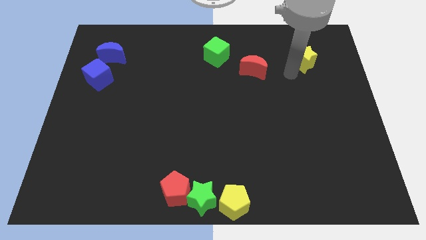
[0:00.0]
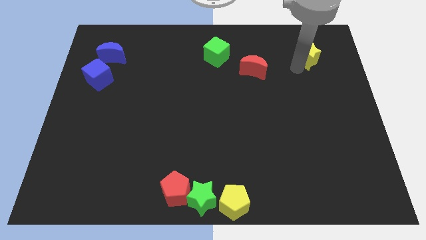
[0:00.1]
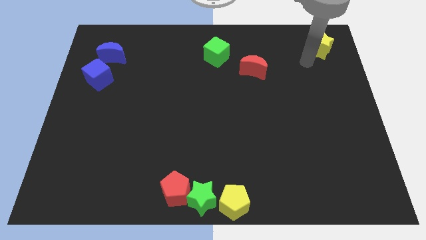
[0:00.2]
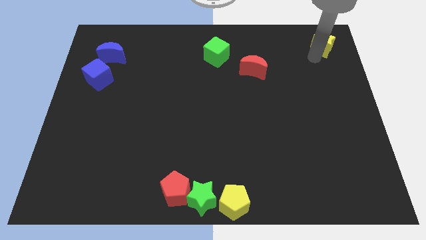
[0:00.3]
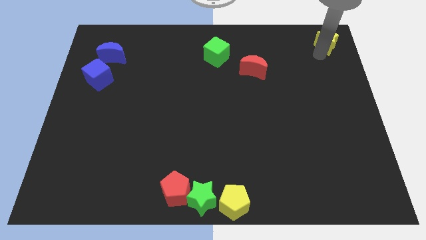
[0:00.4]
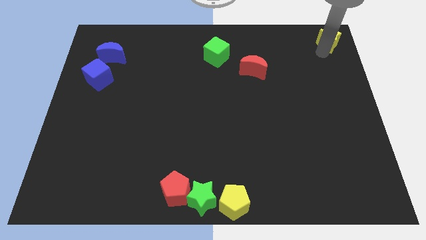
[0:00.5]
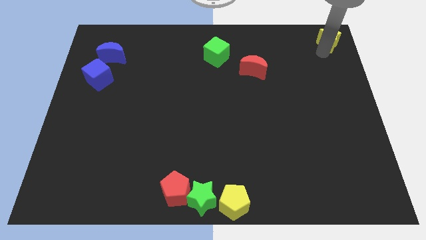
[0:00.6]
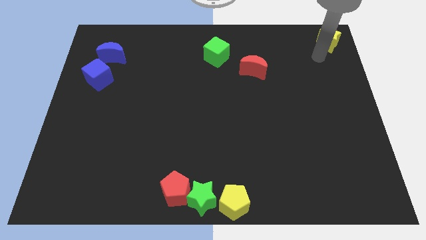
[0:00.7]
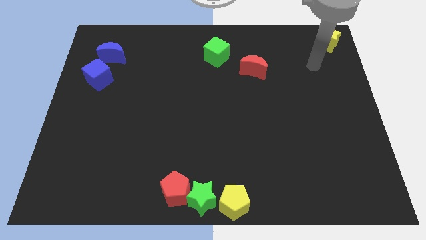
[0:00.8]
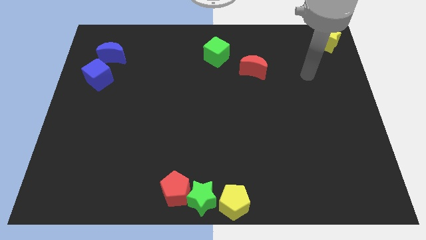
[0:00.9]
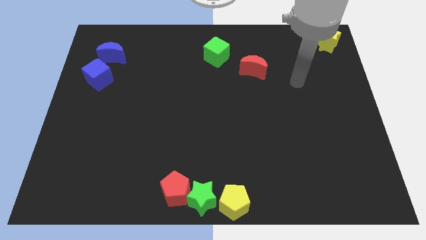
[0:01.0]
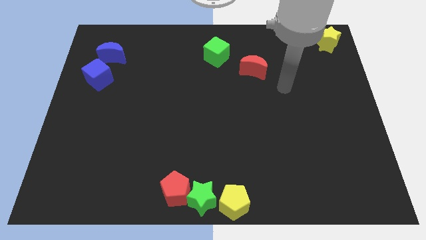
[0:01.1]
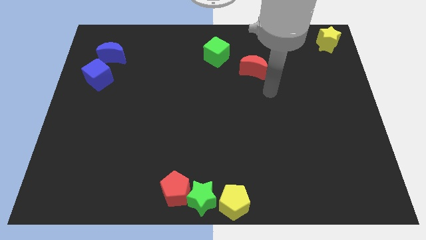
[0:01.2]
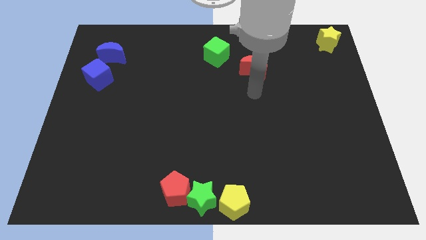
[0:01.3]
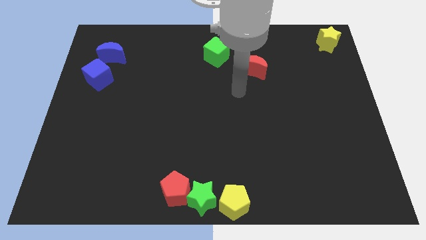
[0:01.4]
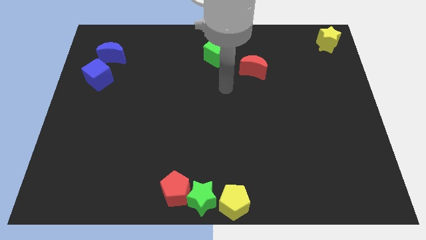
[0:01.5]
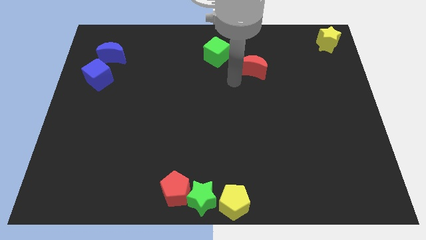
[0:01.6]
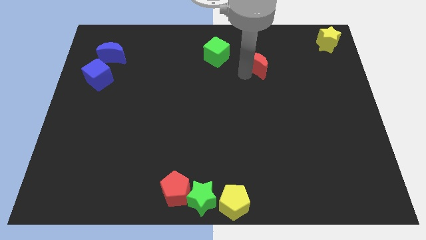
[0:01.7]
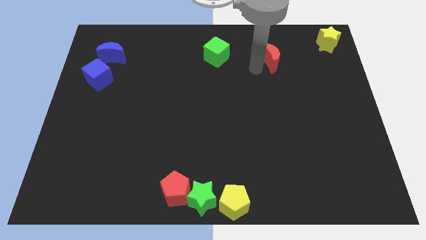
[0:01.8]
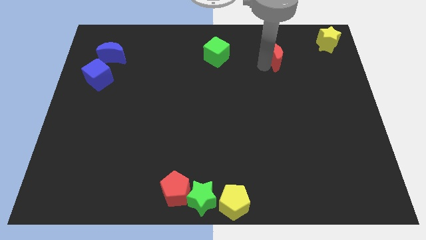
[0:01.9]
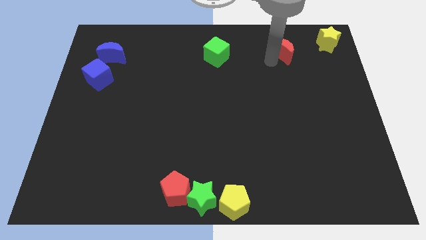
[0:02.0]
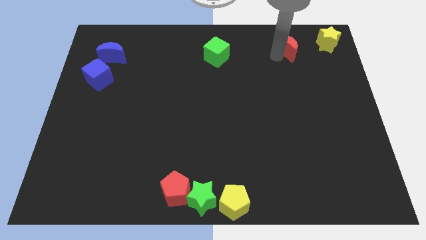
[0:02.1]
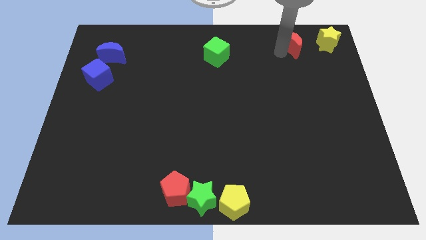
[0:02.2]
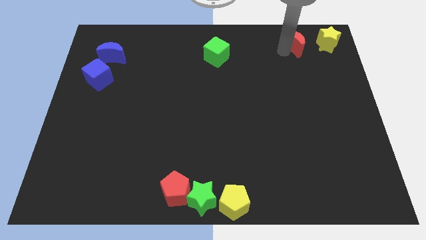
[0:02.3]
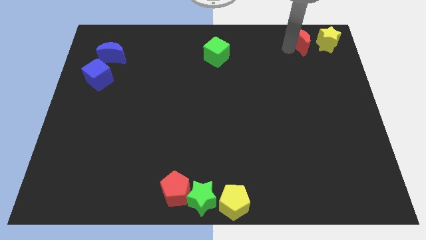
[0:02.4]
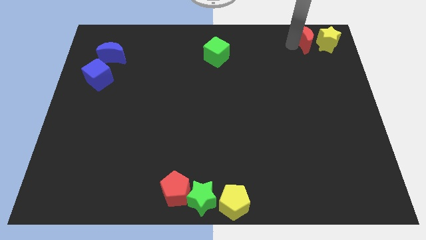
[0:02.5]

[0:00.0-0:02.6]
drag the yellow star to the top right

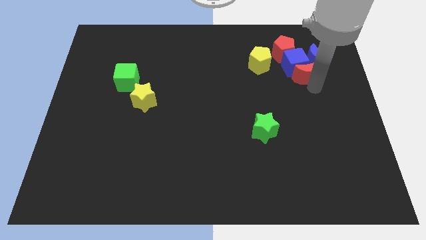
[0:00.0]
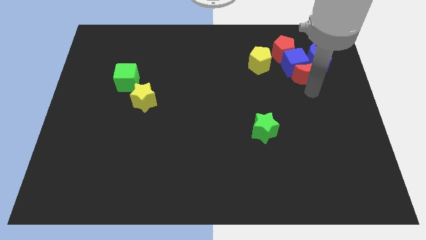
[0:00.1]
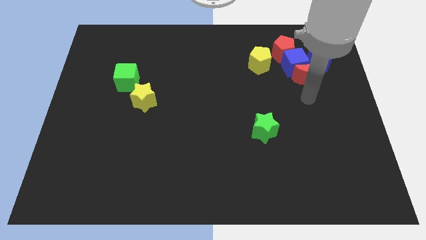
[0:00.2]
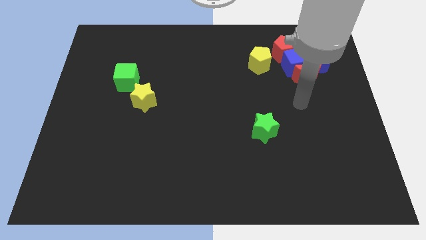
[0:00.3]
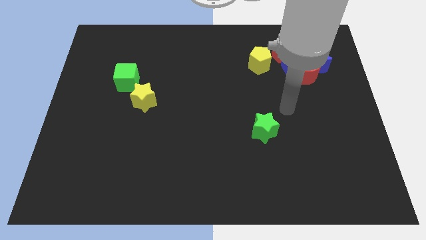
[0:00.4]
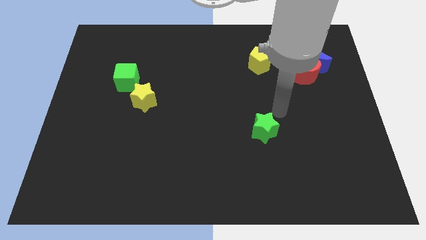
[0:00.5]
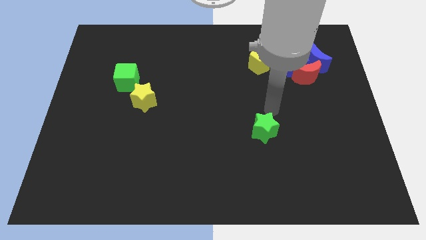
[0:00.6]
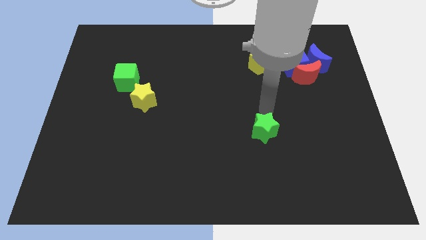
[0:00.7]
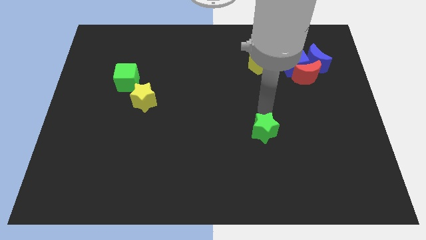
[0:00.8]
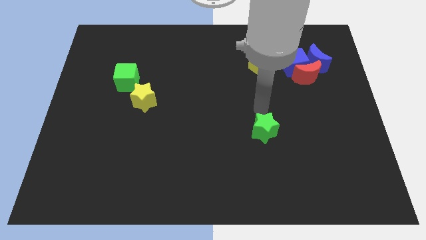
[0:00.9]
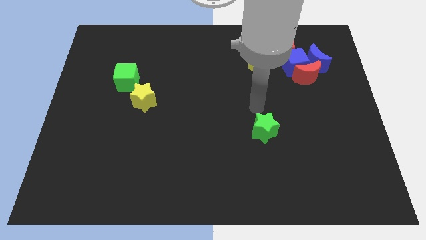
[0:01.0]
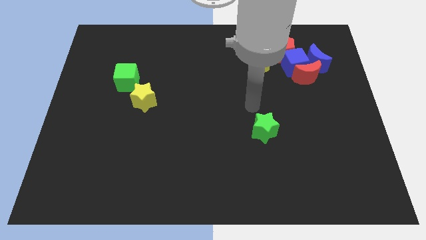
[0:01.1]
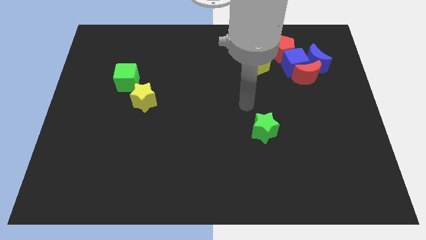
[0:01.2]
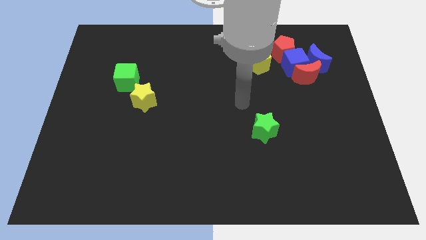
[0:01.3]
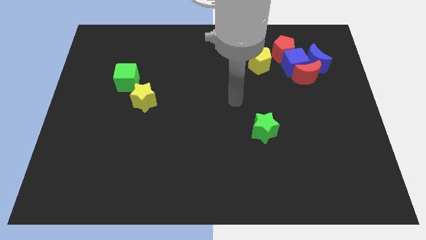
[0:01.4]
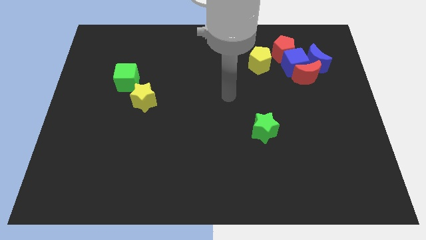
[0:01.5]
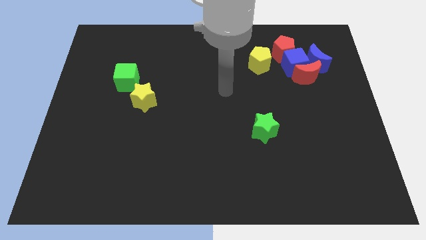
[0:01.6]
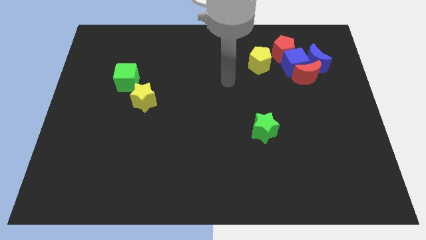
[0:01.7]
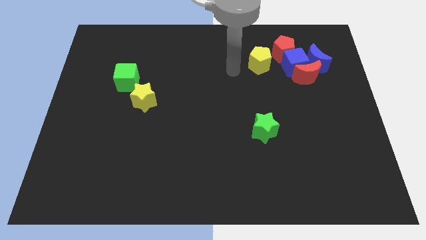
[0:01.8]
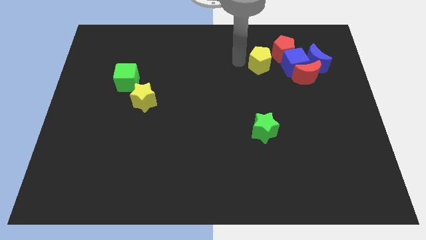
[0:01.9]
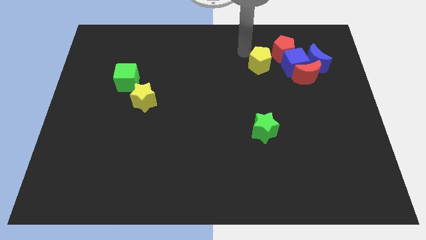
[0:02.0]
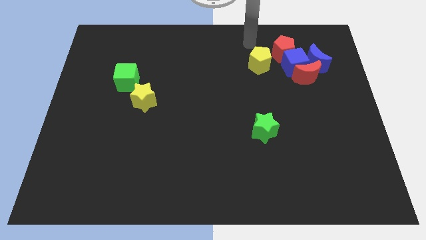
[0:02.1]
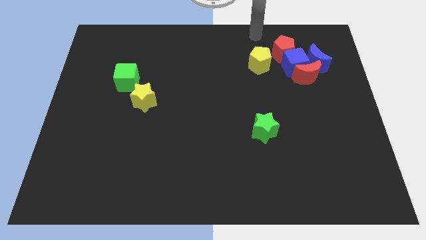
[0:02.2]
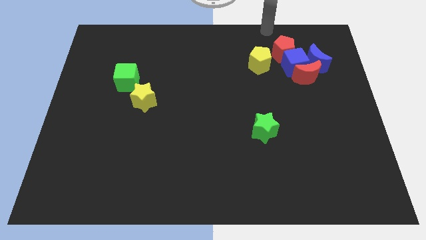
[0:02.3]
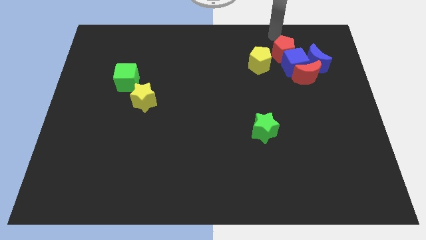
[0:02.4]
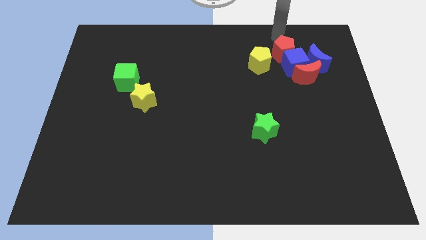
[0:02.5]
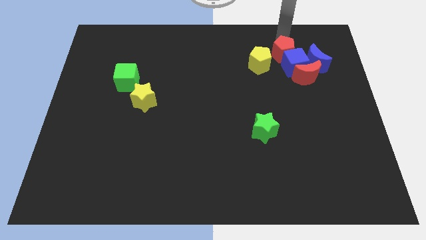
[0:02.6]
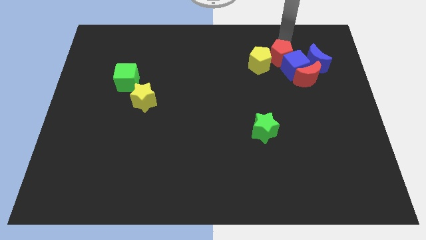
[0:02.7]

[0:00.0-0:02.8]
place your arm at the top of red pentagon

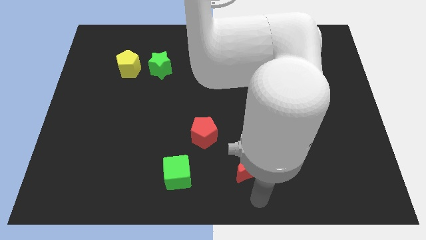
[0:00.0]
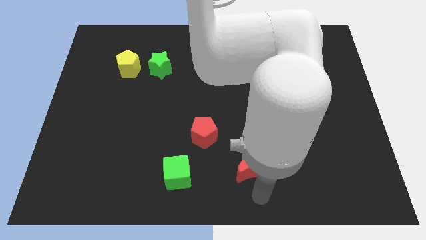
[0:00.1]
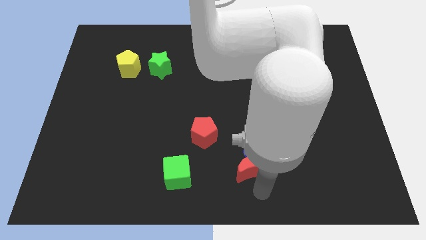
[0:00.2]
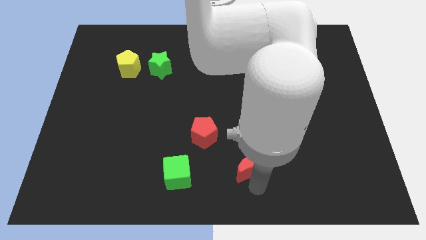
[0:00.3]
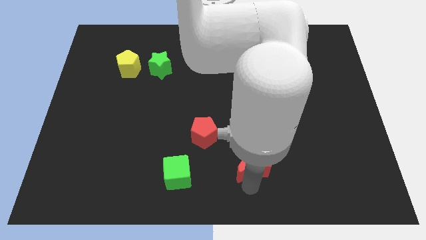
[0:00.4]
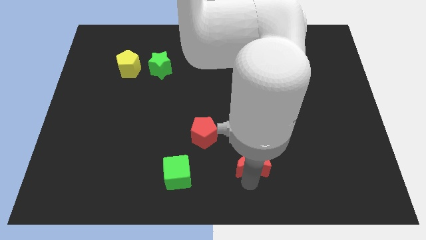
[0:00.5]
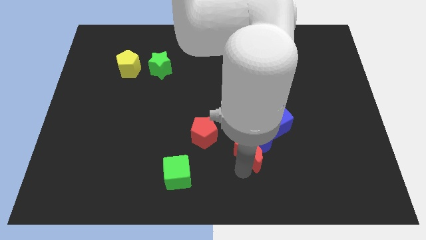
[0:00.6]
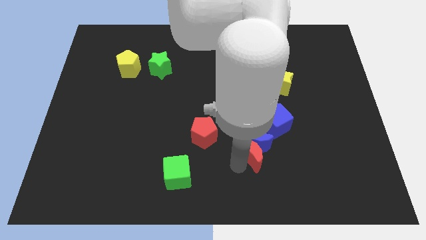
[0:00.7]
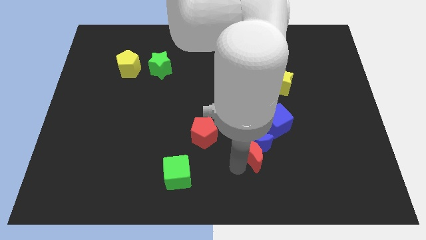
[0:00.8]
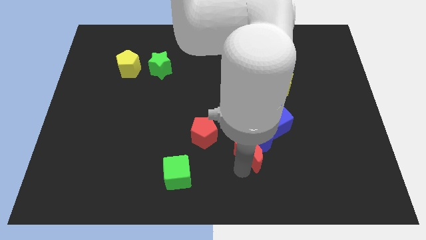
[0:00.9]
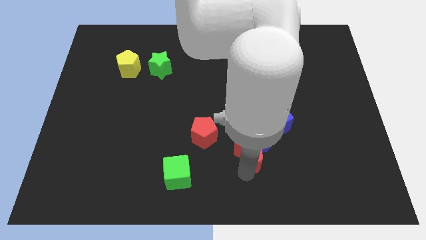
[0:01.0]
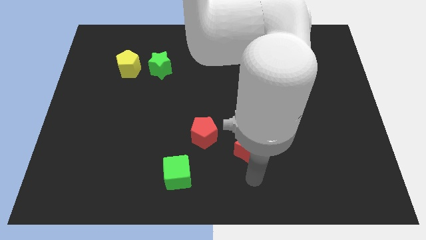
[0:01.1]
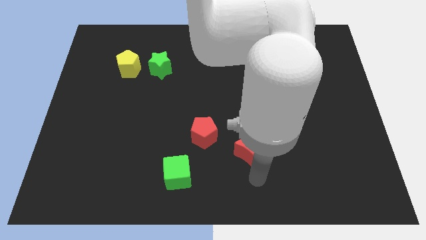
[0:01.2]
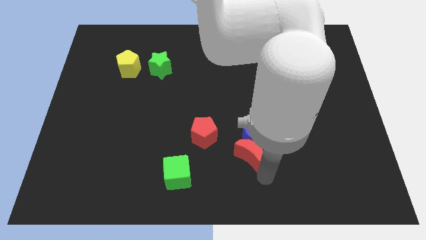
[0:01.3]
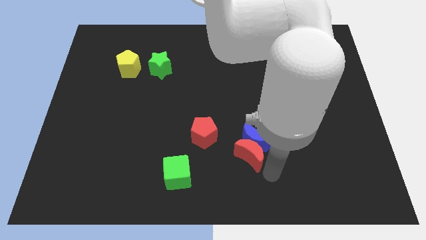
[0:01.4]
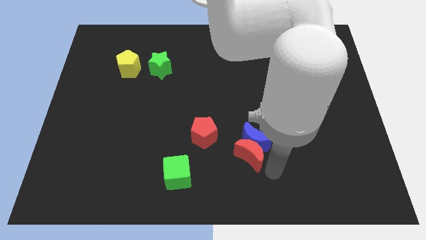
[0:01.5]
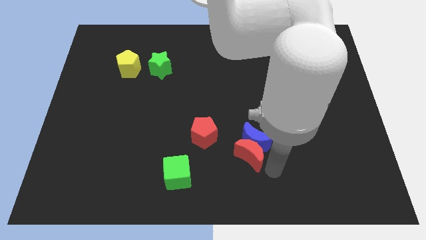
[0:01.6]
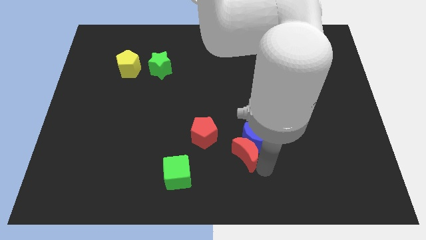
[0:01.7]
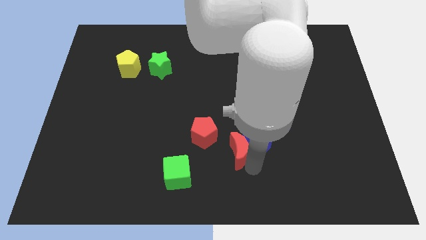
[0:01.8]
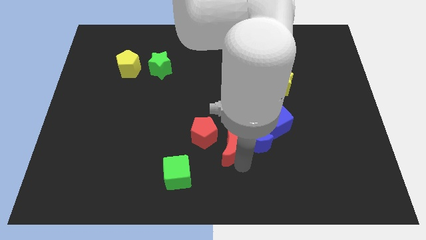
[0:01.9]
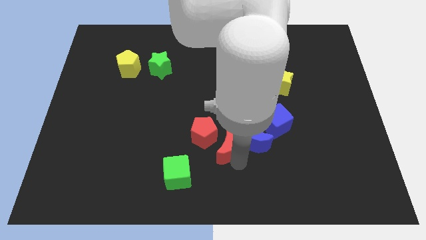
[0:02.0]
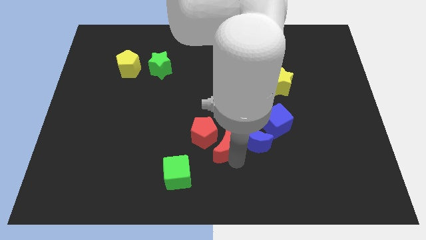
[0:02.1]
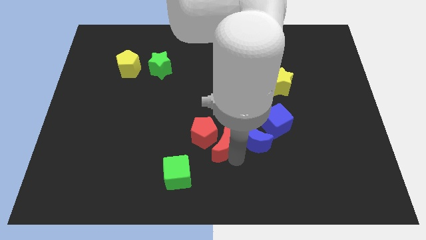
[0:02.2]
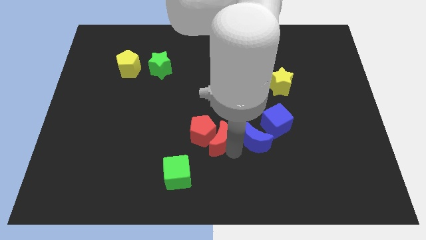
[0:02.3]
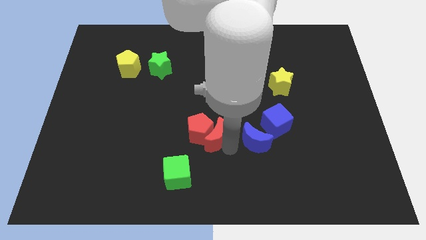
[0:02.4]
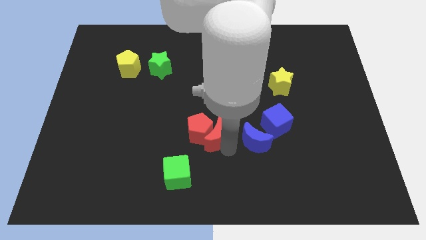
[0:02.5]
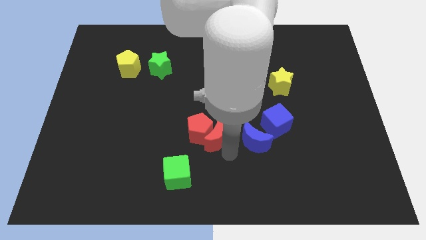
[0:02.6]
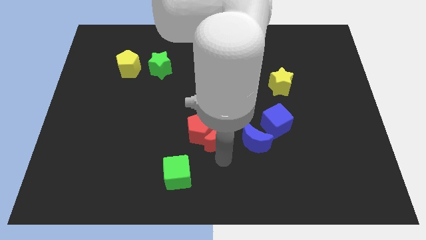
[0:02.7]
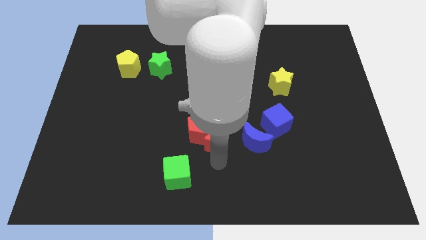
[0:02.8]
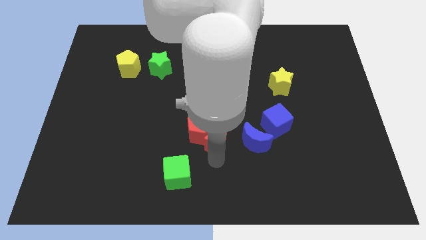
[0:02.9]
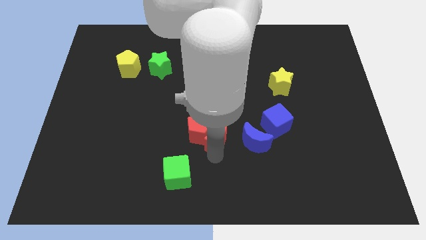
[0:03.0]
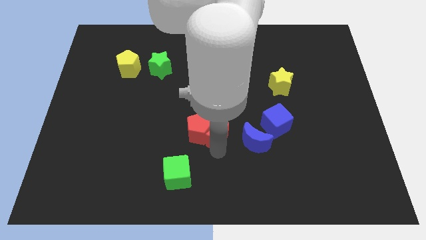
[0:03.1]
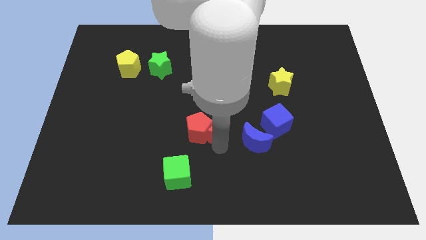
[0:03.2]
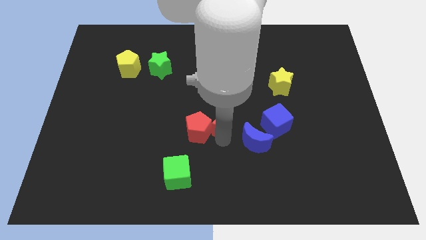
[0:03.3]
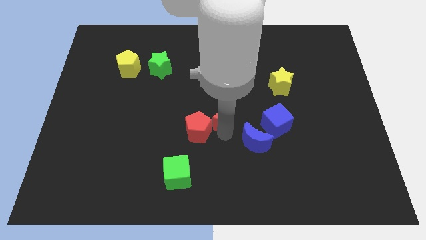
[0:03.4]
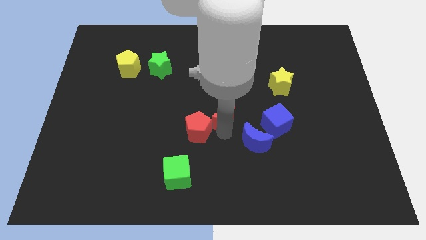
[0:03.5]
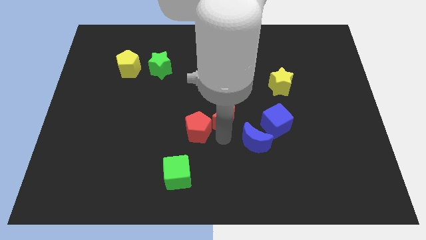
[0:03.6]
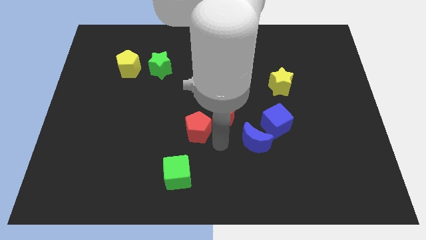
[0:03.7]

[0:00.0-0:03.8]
move the red crescent to the center of the board
